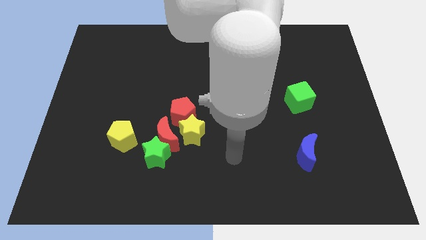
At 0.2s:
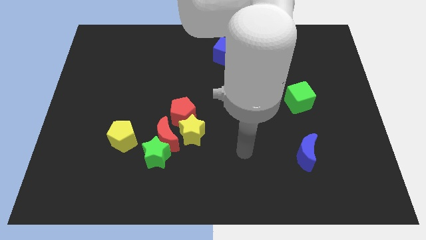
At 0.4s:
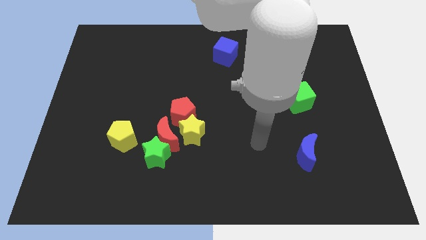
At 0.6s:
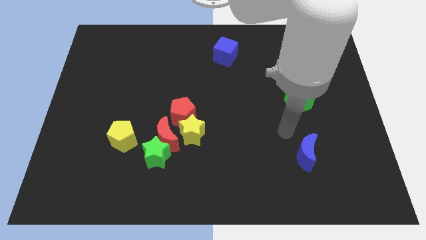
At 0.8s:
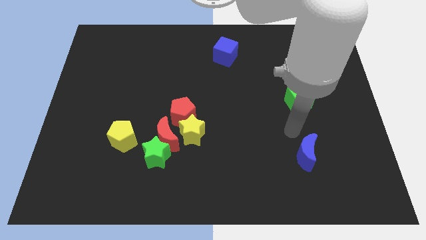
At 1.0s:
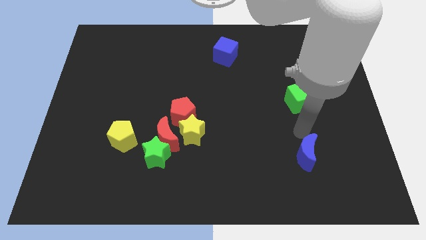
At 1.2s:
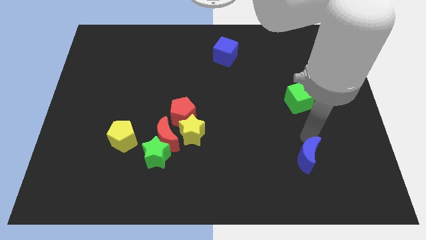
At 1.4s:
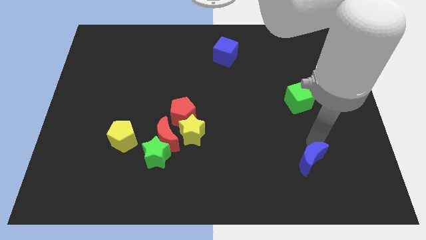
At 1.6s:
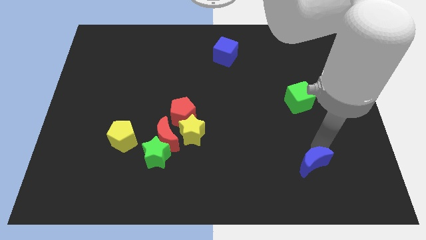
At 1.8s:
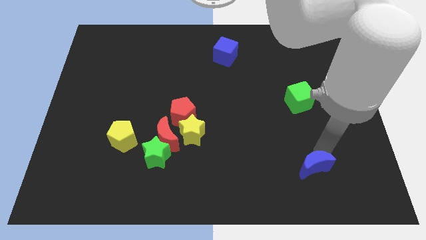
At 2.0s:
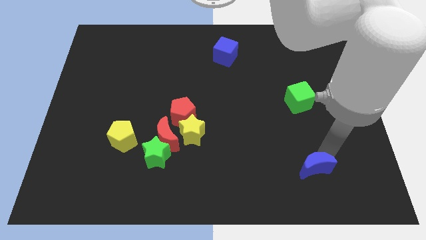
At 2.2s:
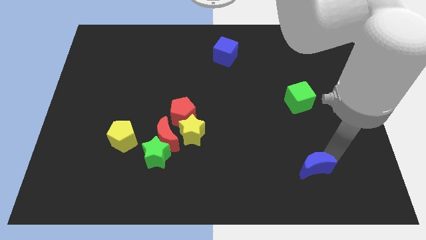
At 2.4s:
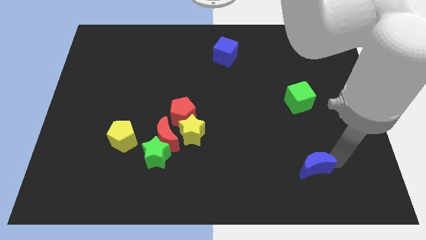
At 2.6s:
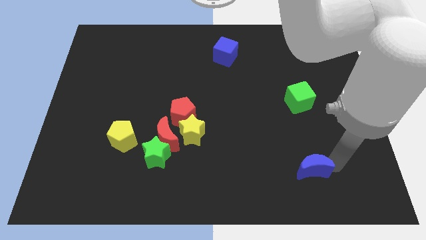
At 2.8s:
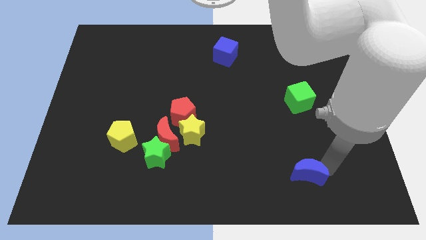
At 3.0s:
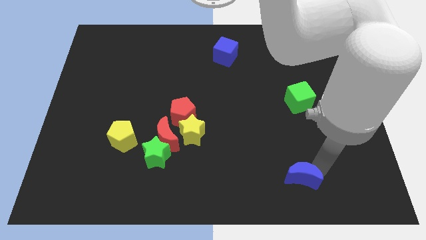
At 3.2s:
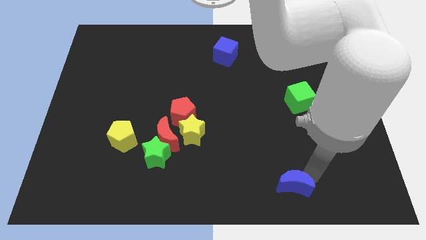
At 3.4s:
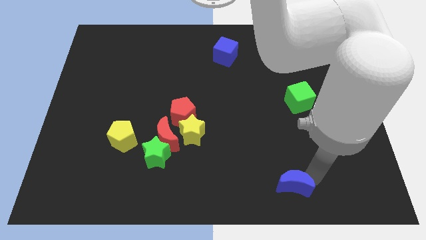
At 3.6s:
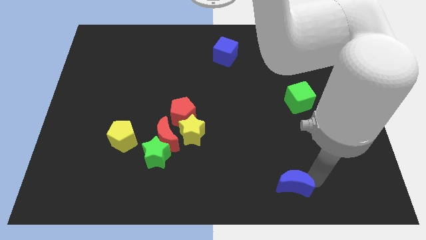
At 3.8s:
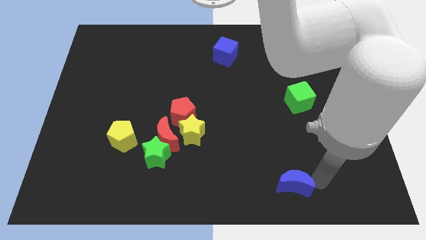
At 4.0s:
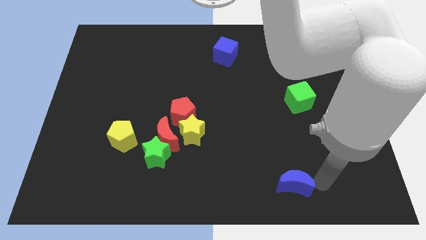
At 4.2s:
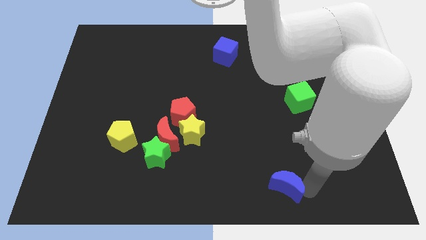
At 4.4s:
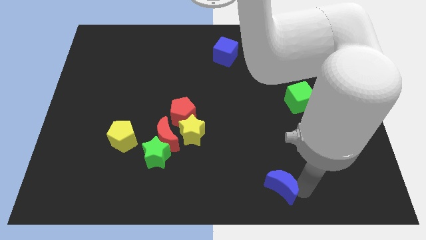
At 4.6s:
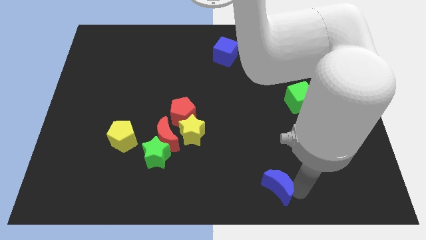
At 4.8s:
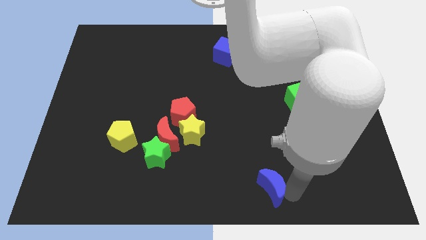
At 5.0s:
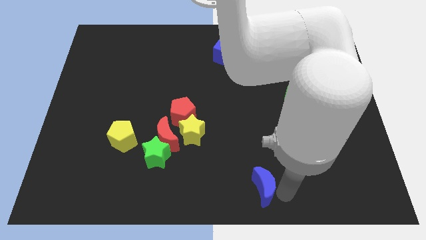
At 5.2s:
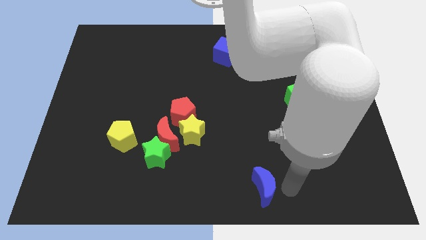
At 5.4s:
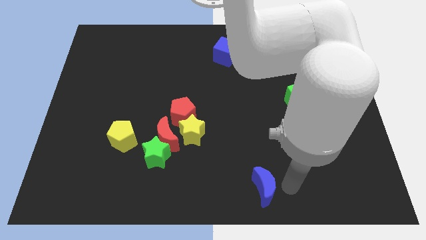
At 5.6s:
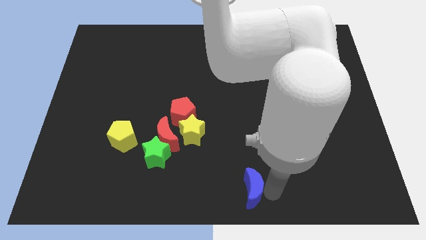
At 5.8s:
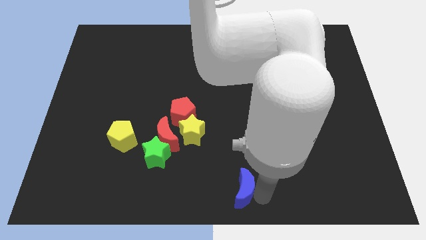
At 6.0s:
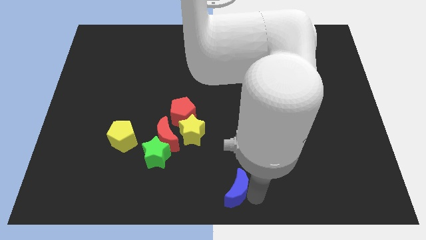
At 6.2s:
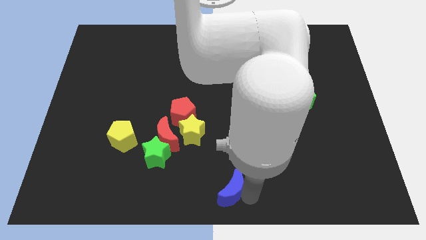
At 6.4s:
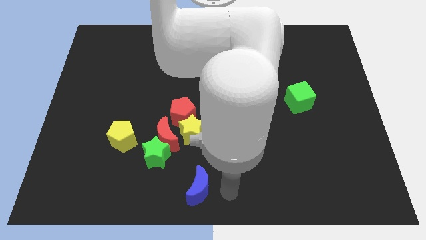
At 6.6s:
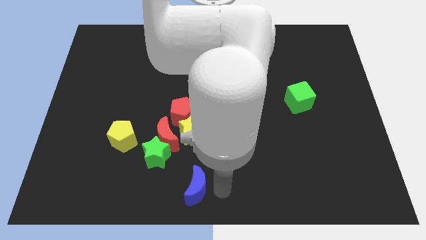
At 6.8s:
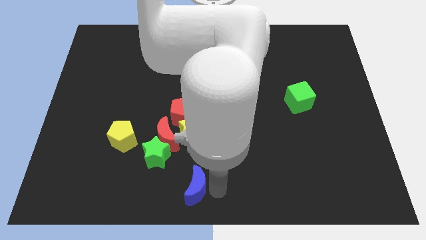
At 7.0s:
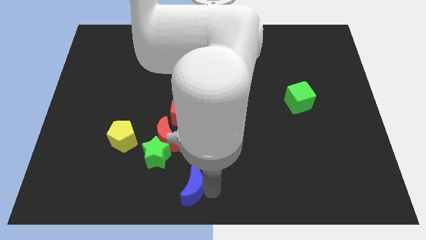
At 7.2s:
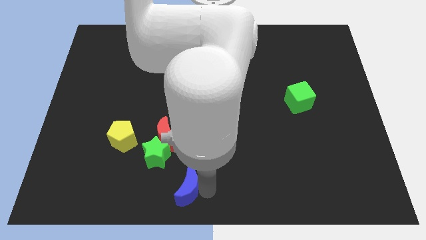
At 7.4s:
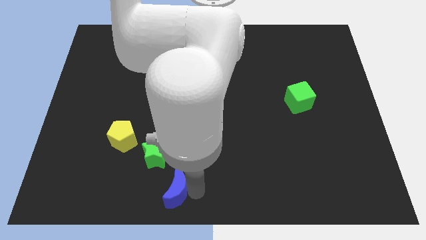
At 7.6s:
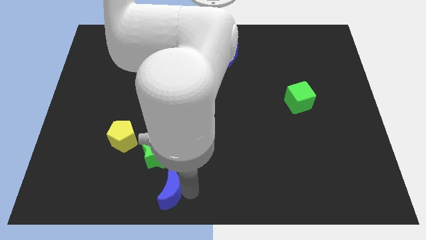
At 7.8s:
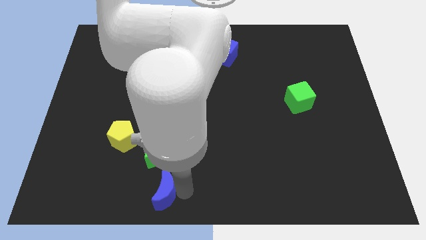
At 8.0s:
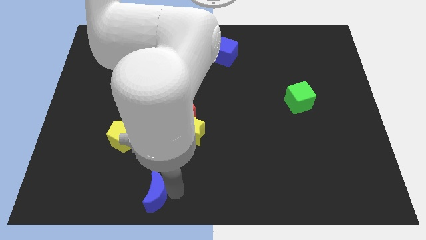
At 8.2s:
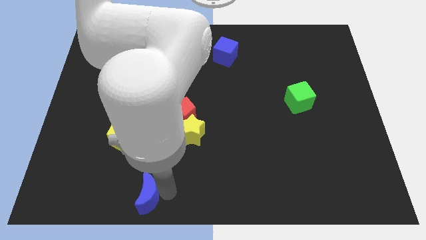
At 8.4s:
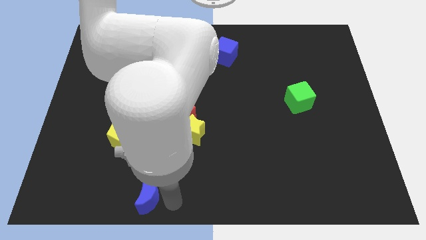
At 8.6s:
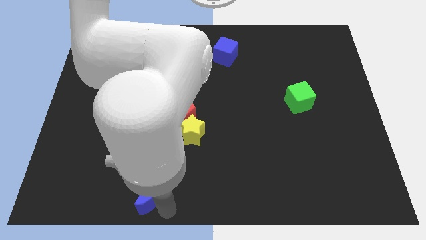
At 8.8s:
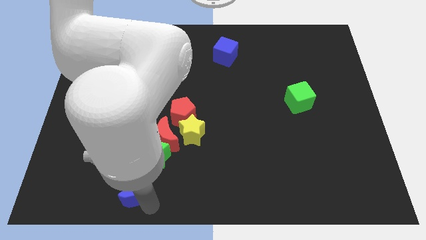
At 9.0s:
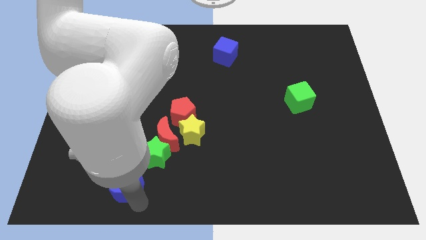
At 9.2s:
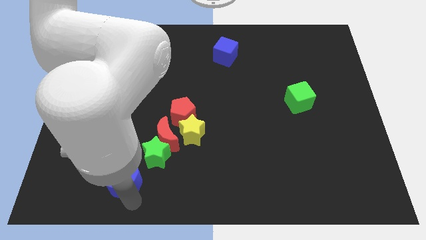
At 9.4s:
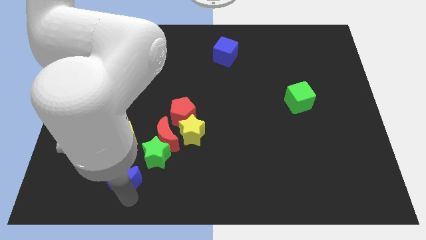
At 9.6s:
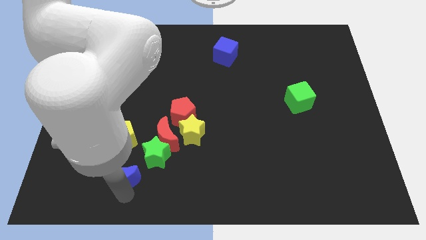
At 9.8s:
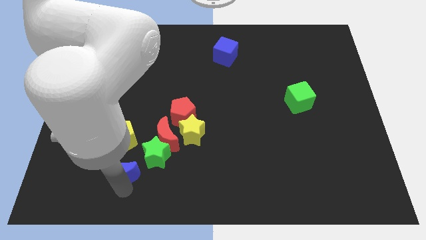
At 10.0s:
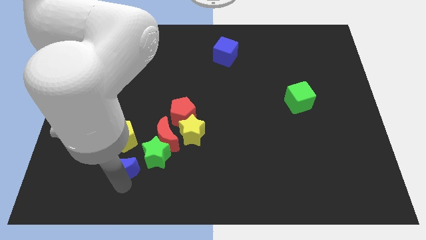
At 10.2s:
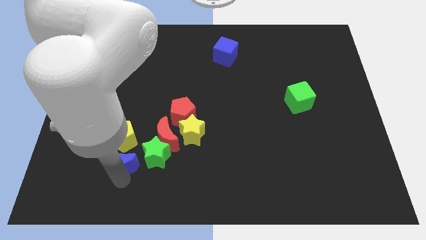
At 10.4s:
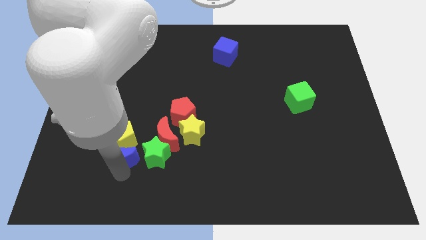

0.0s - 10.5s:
slide the blue moon next to the yellow pentagon

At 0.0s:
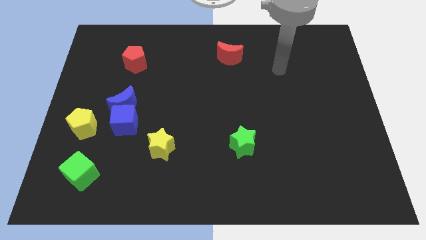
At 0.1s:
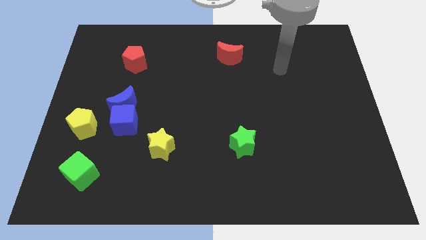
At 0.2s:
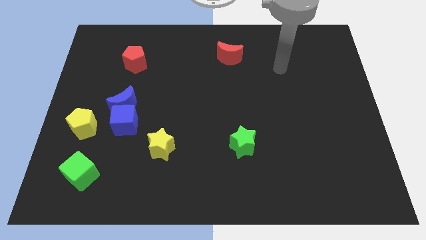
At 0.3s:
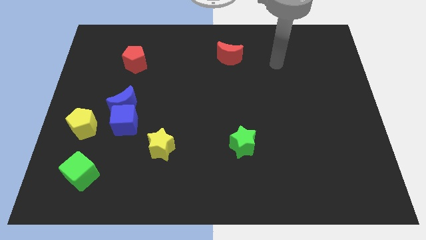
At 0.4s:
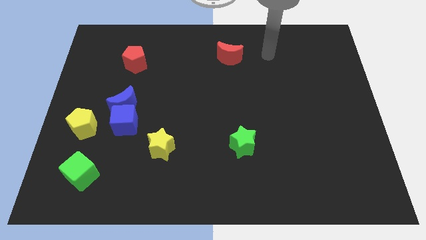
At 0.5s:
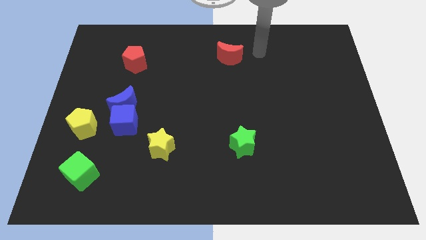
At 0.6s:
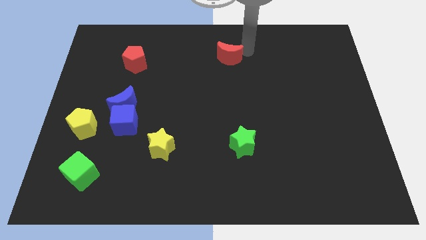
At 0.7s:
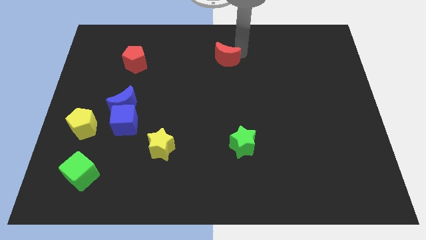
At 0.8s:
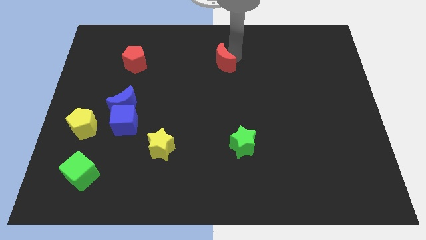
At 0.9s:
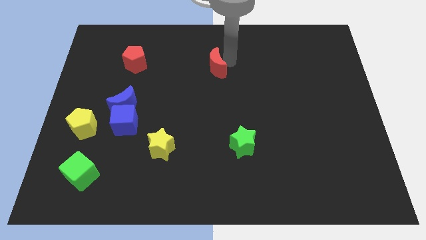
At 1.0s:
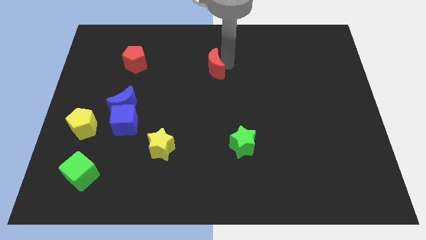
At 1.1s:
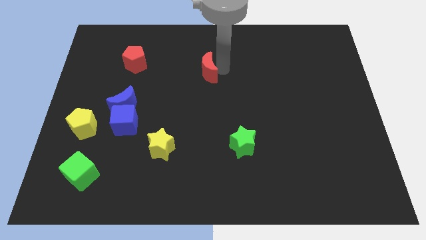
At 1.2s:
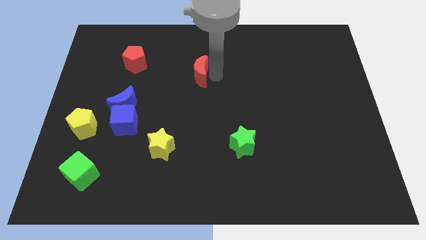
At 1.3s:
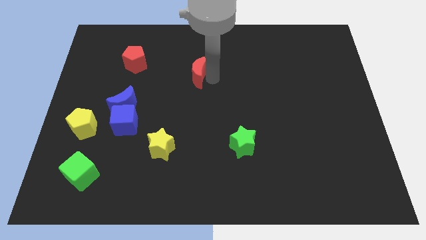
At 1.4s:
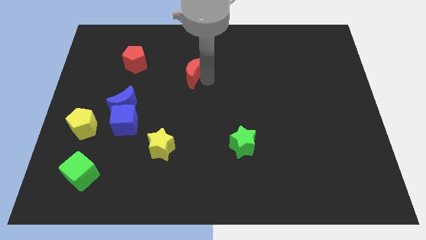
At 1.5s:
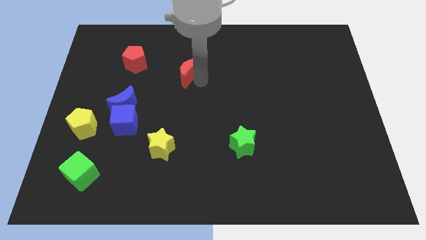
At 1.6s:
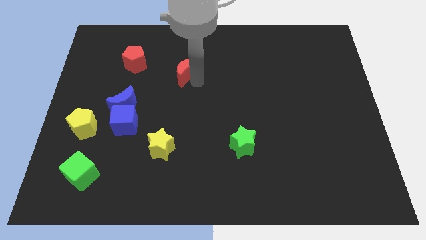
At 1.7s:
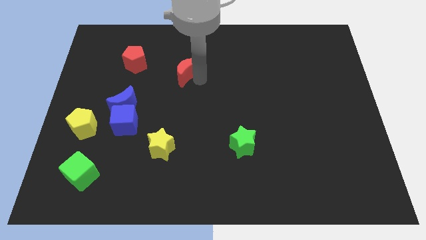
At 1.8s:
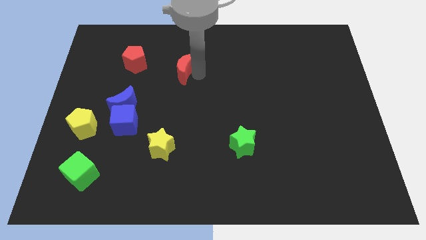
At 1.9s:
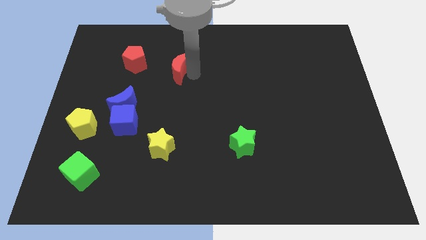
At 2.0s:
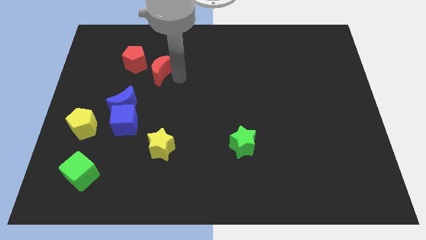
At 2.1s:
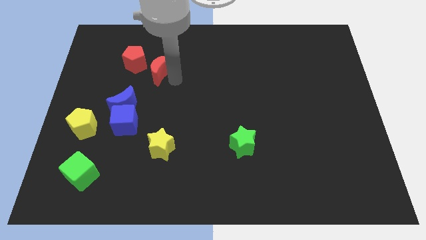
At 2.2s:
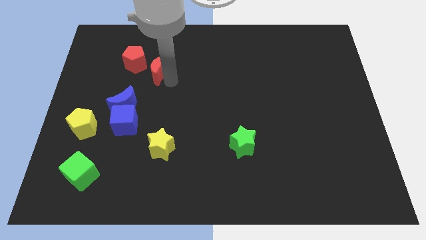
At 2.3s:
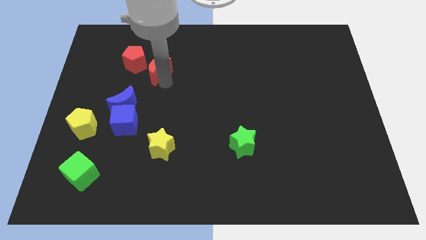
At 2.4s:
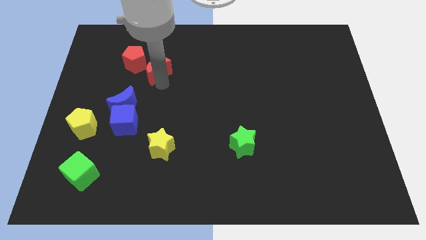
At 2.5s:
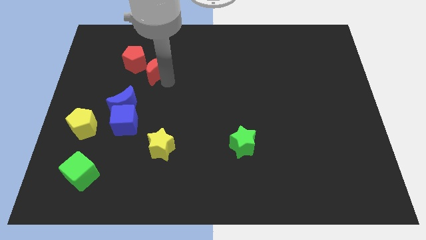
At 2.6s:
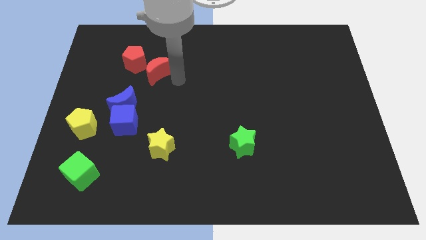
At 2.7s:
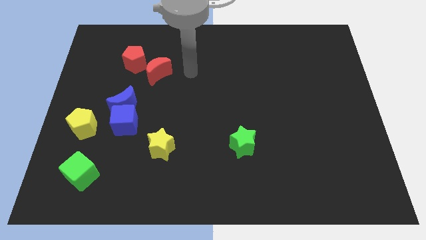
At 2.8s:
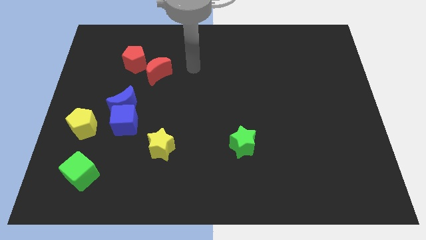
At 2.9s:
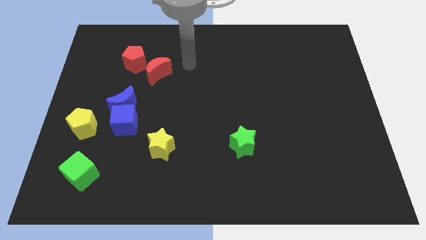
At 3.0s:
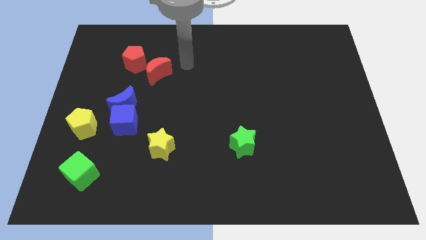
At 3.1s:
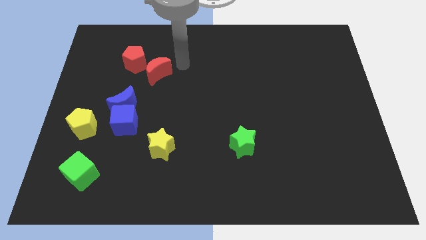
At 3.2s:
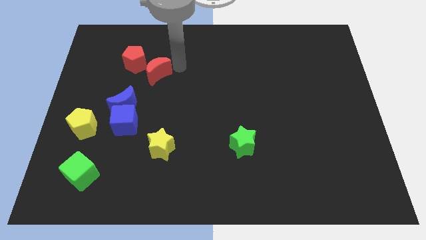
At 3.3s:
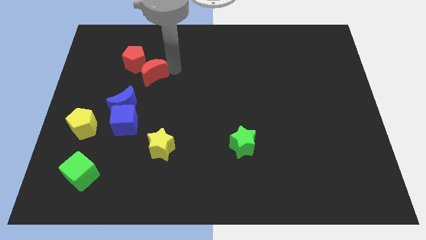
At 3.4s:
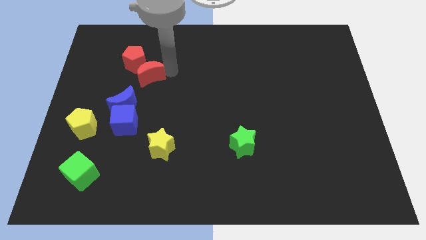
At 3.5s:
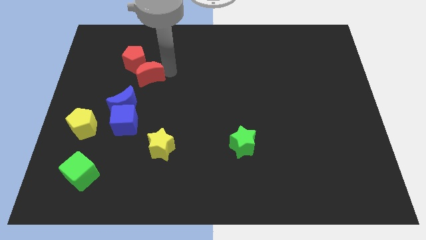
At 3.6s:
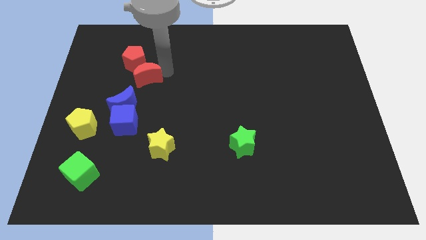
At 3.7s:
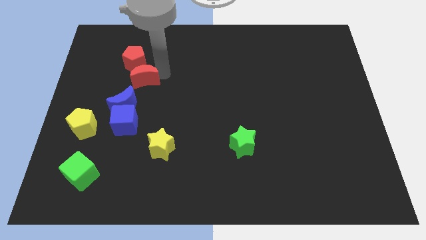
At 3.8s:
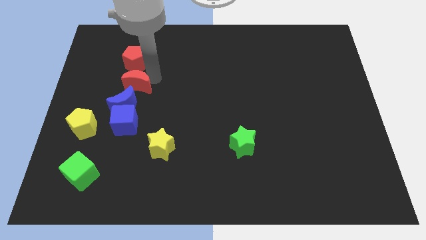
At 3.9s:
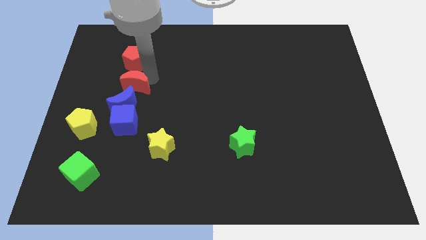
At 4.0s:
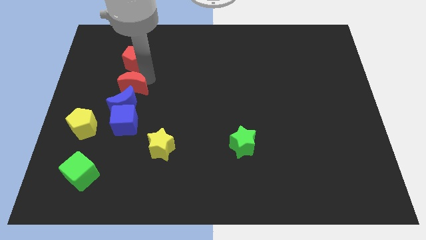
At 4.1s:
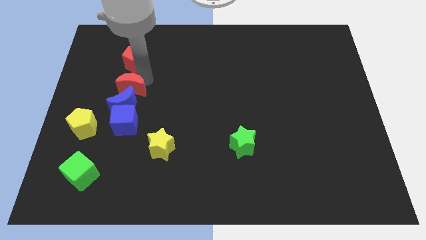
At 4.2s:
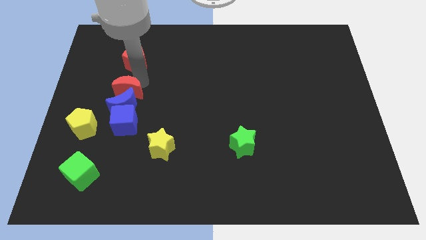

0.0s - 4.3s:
push the red moon next to the blue moon
